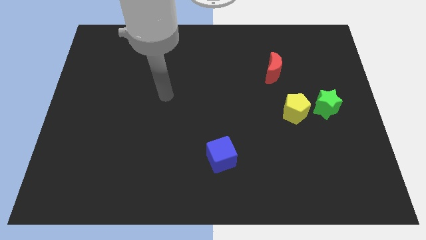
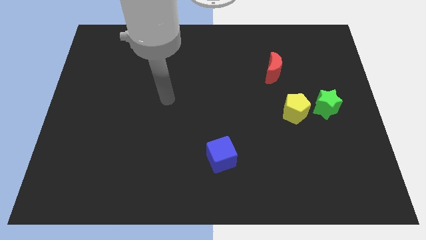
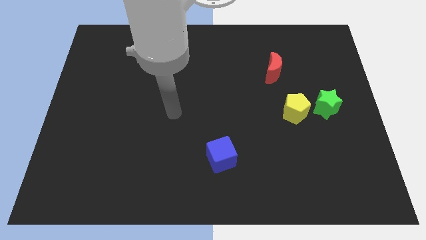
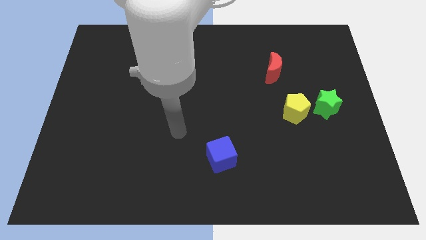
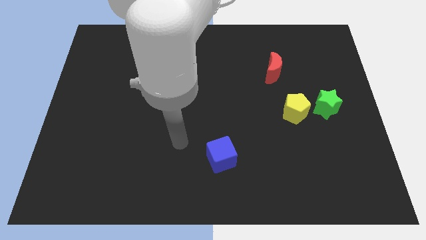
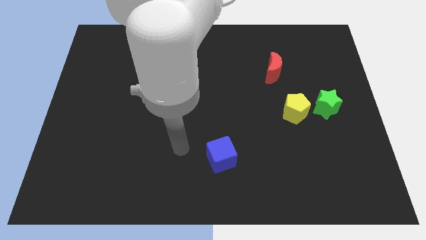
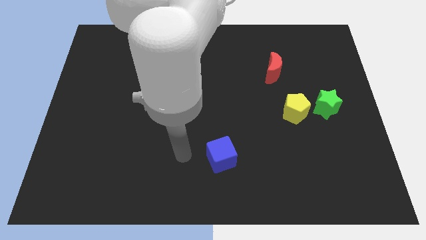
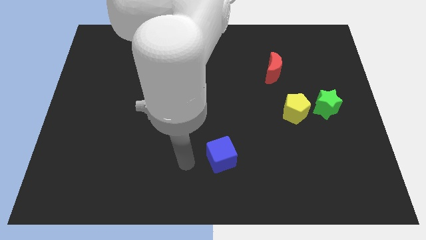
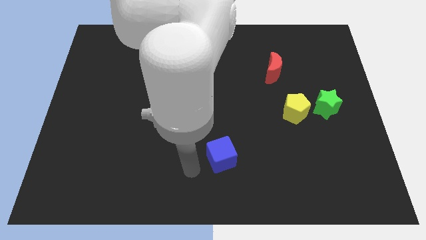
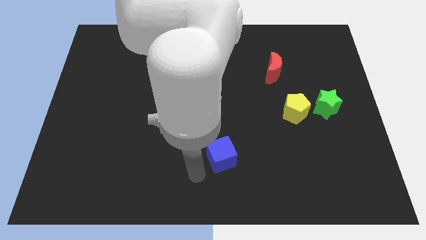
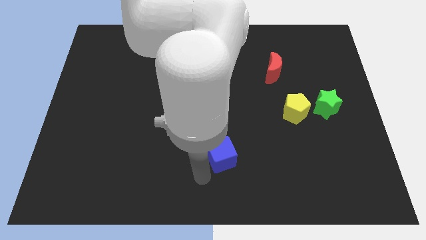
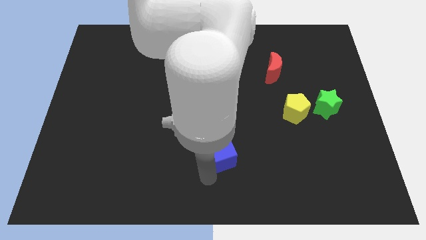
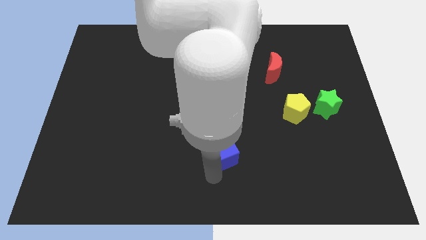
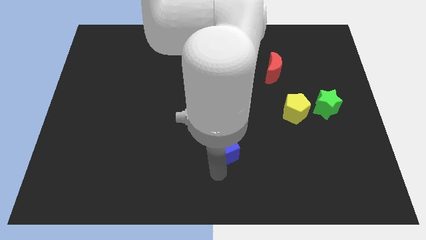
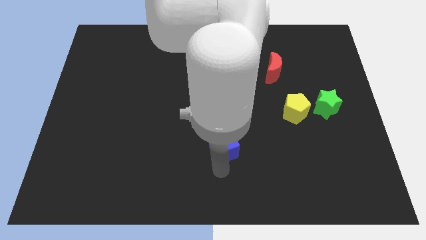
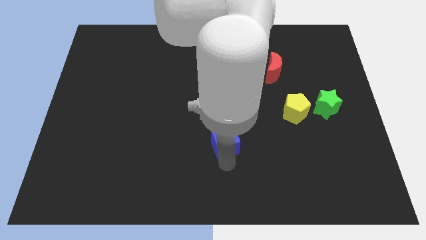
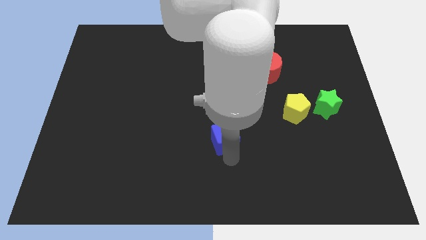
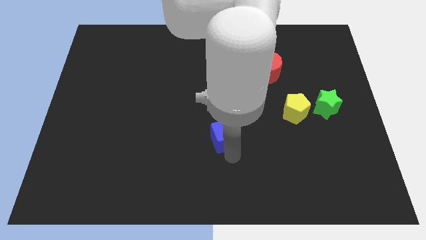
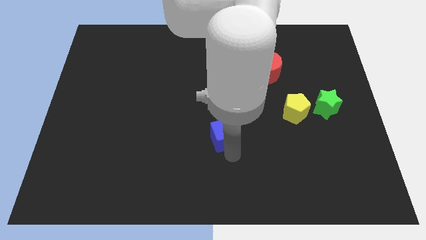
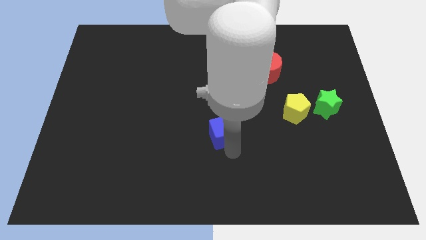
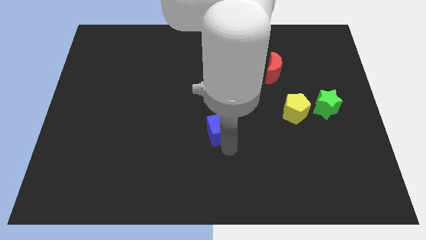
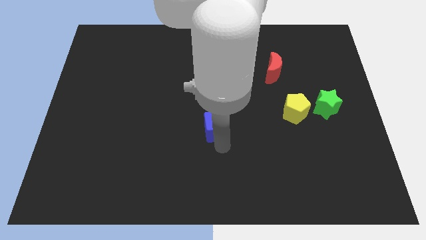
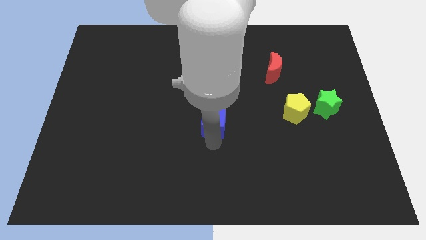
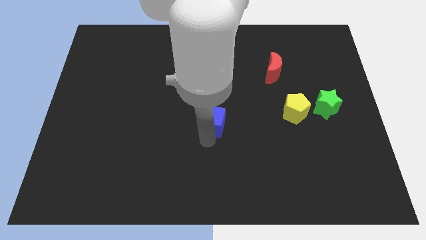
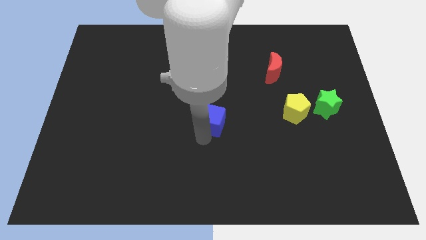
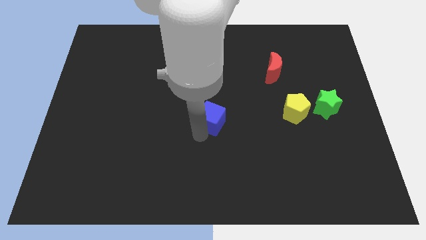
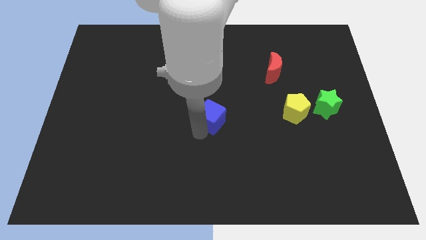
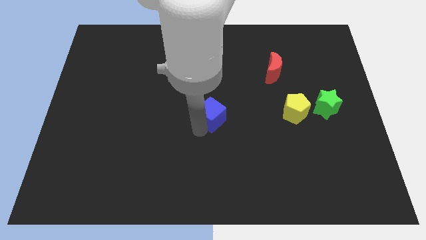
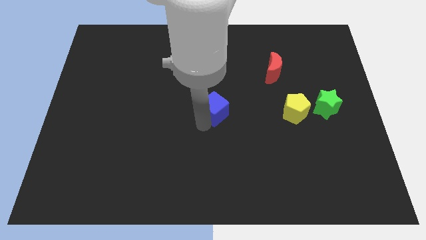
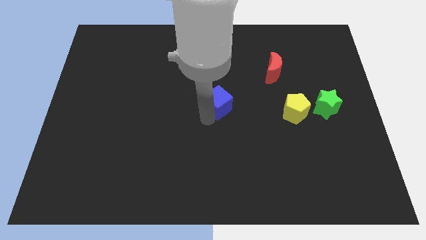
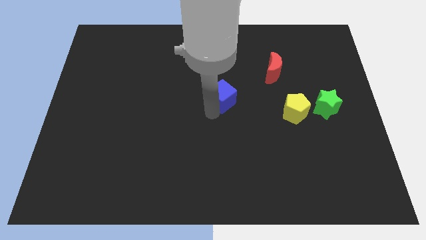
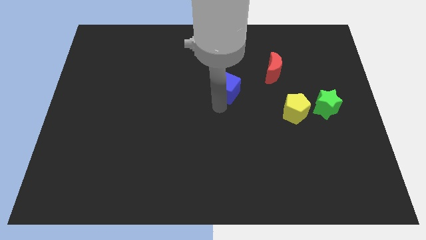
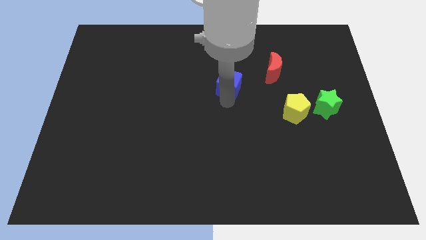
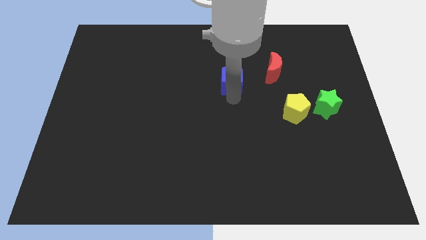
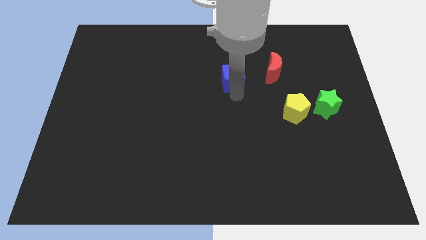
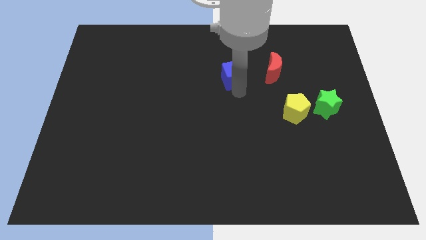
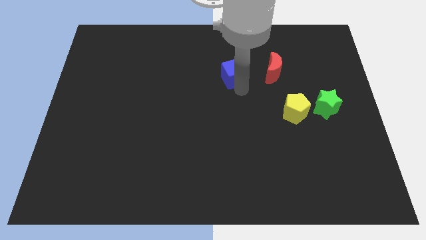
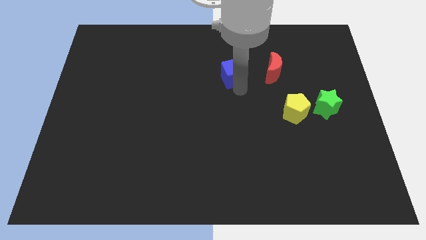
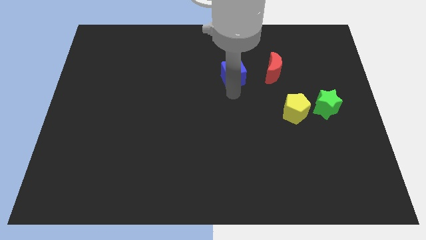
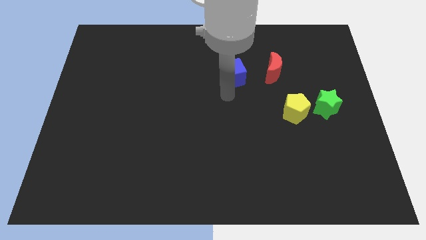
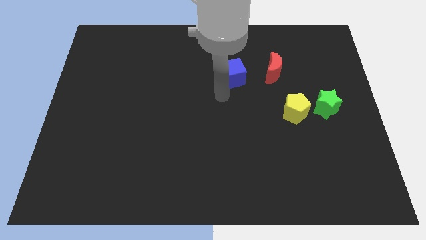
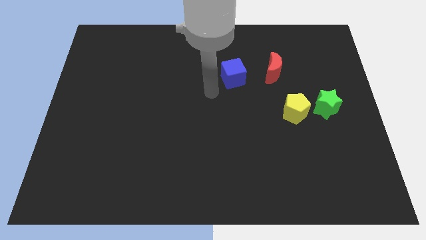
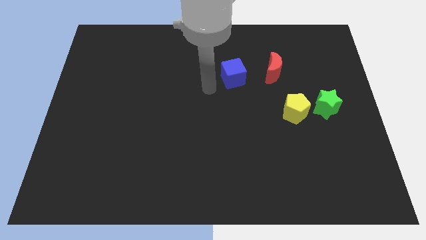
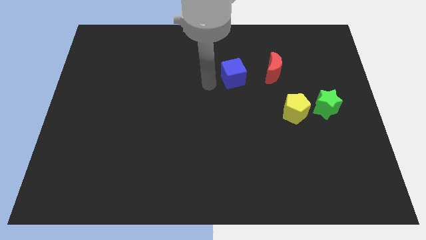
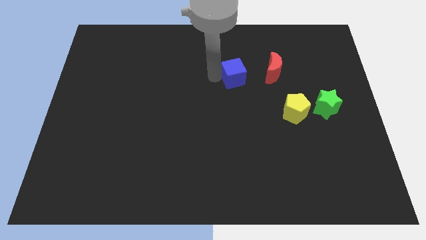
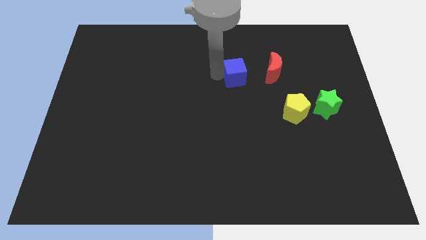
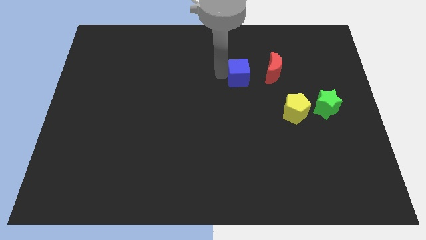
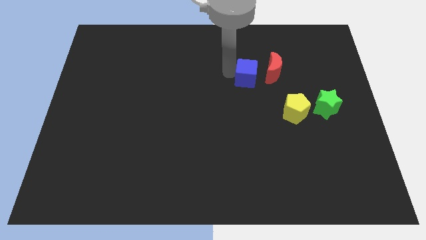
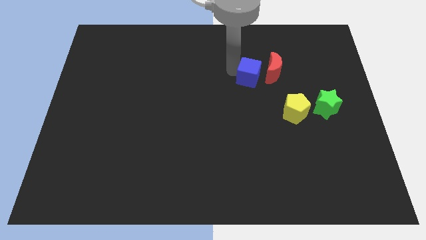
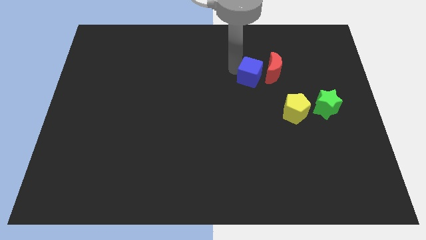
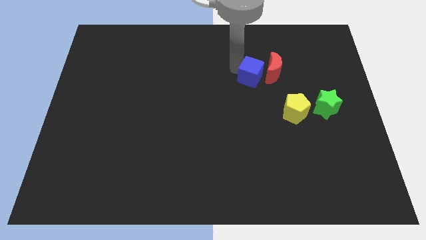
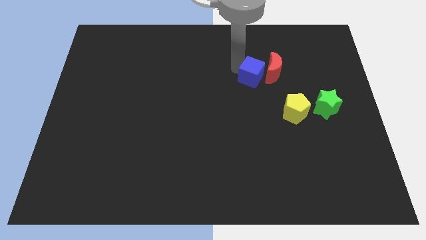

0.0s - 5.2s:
slide the cube close to the red moon

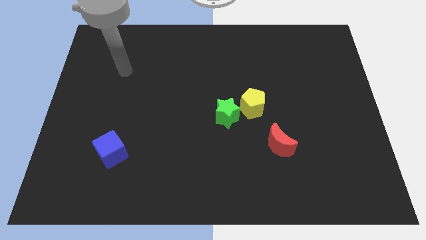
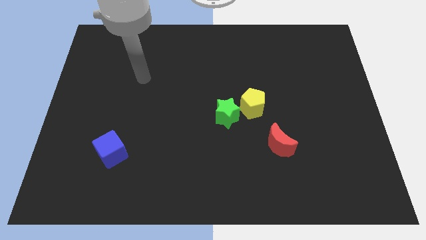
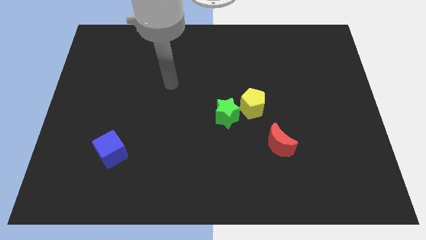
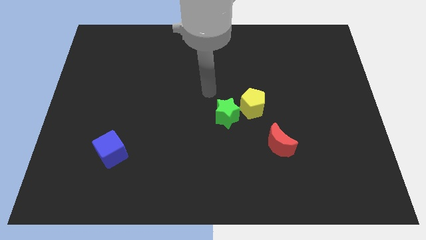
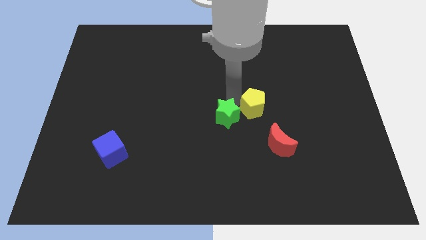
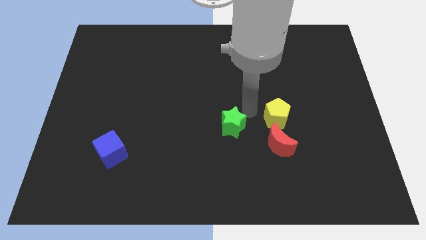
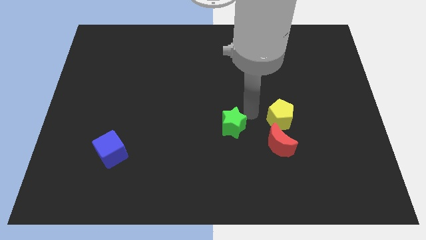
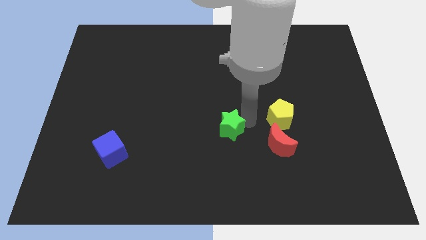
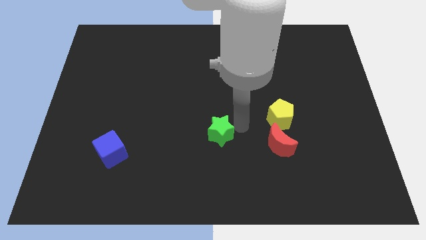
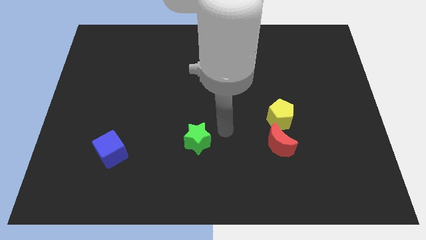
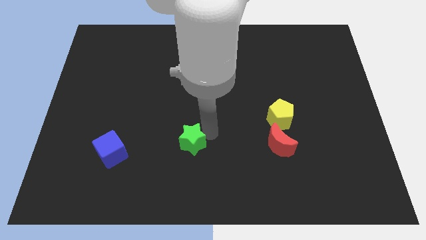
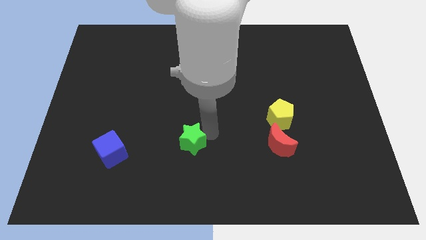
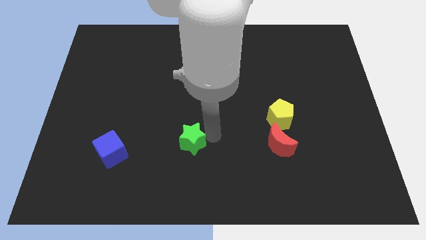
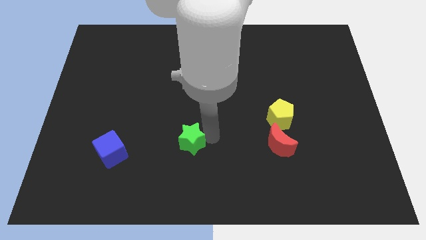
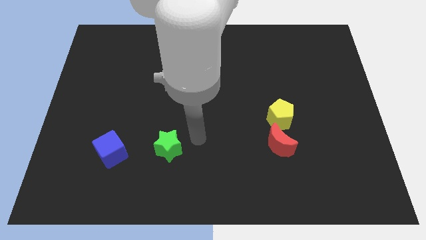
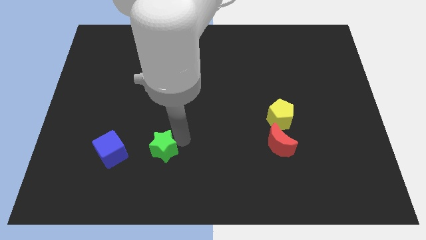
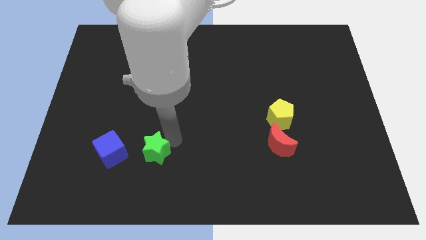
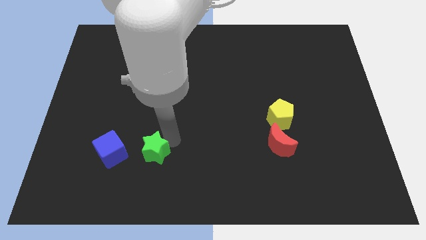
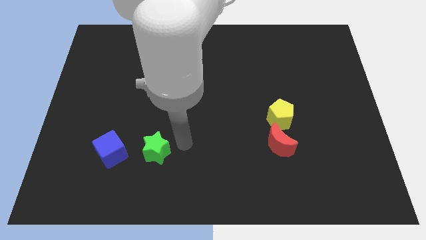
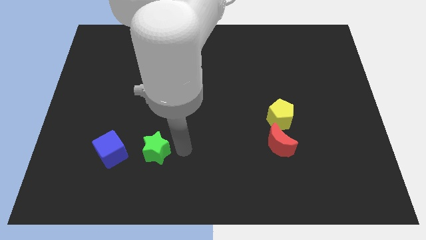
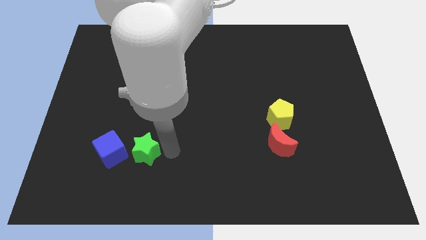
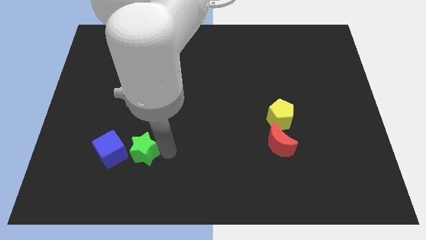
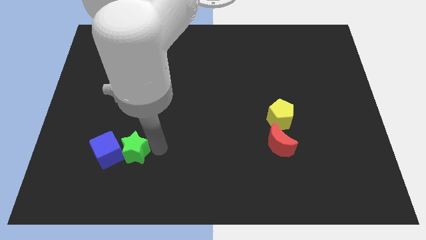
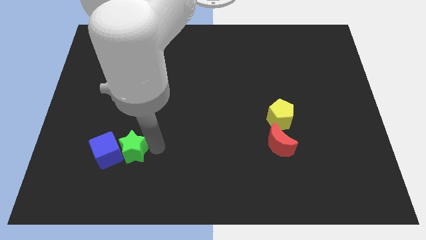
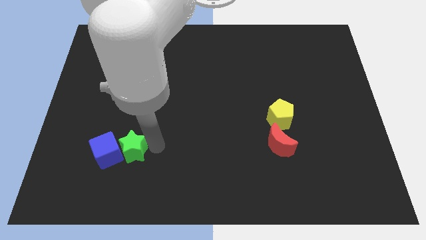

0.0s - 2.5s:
move the star next to the blue block

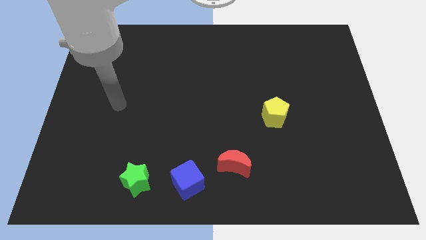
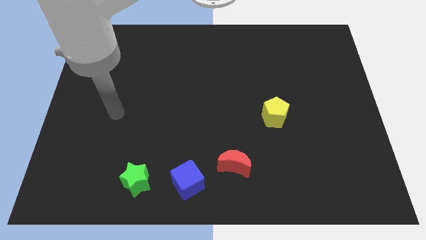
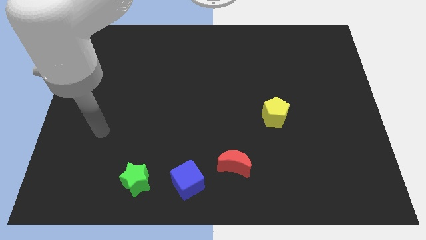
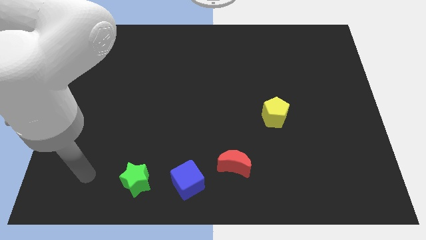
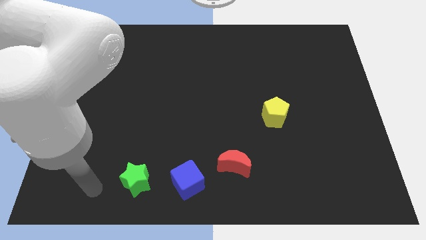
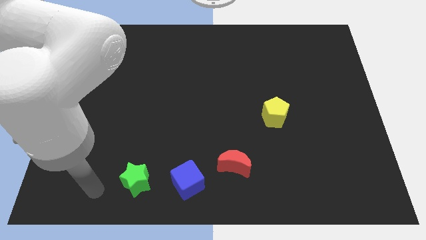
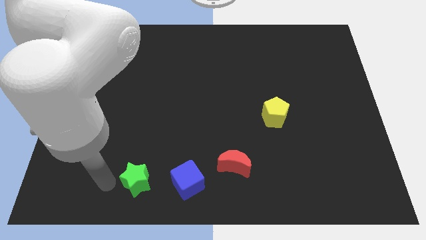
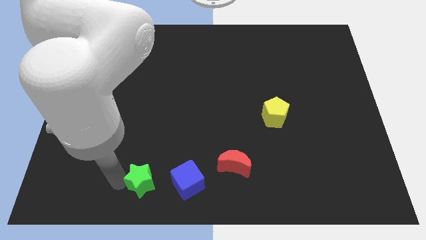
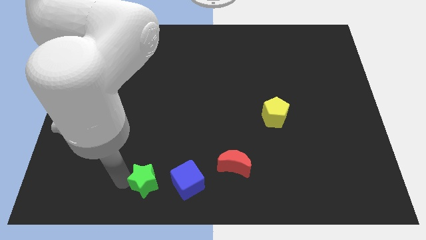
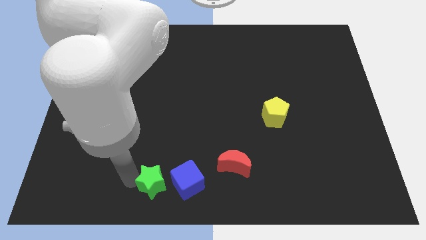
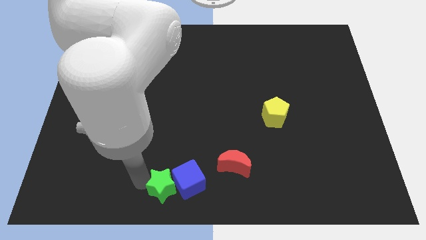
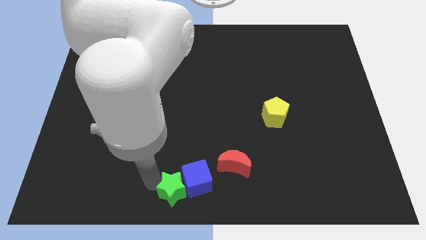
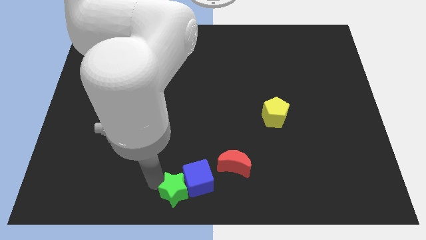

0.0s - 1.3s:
push the green star towards the blue cube
